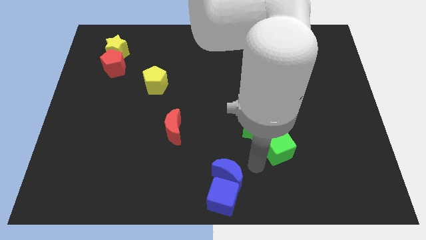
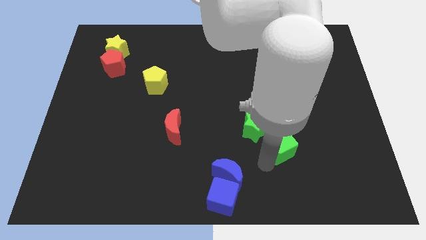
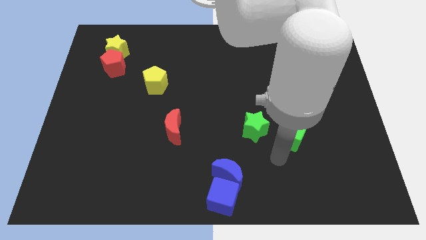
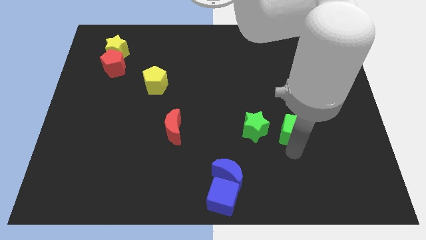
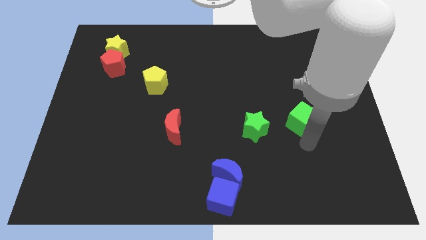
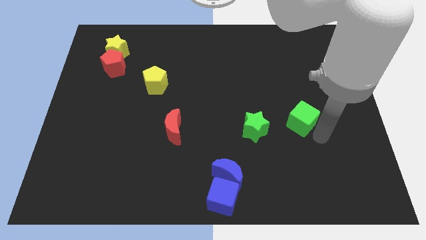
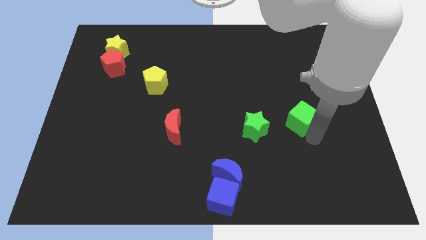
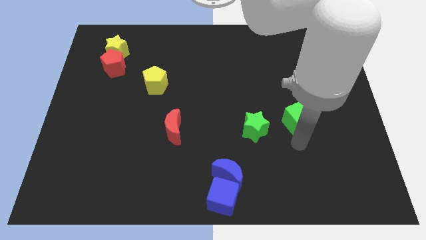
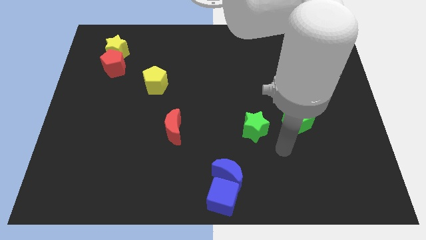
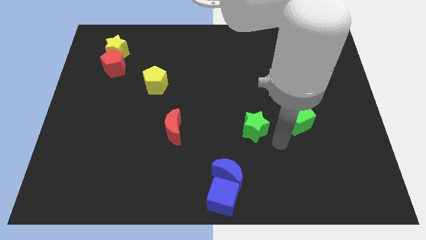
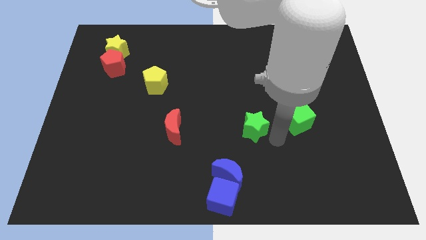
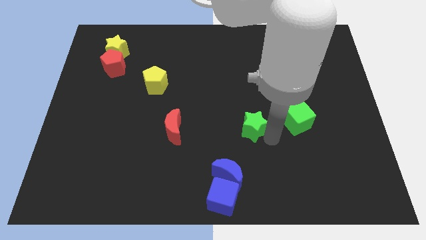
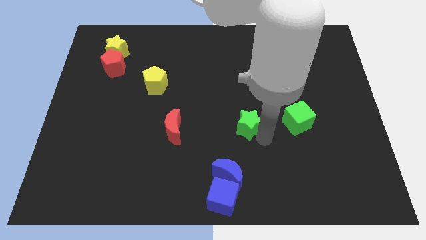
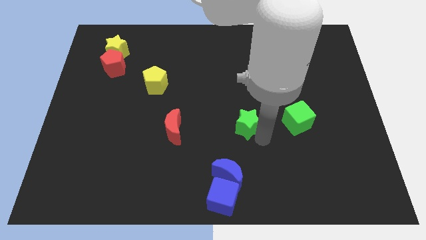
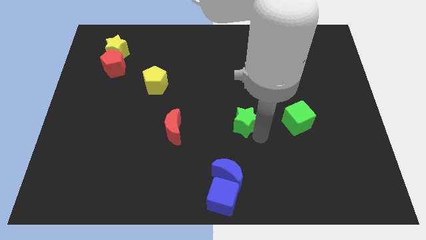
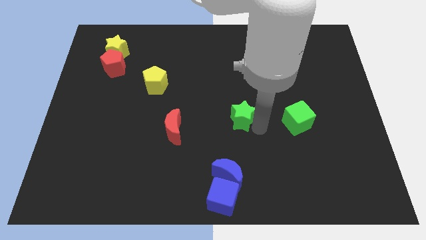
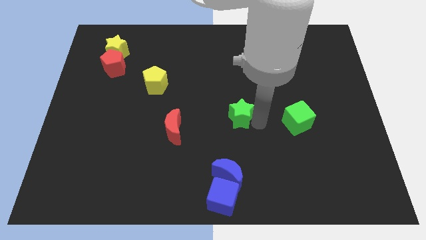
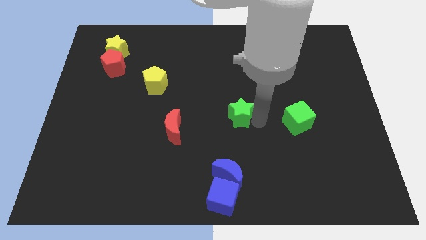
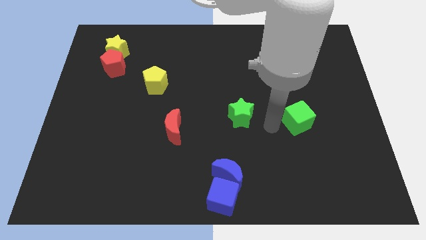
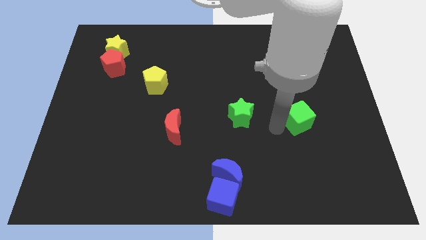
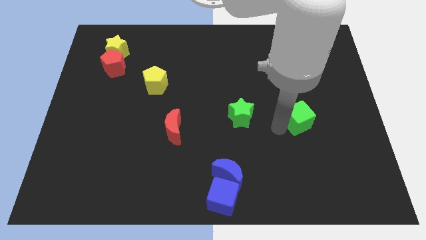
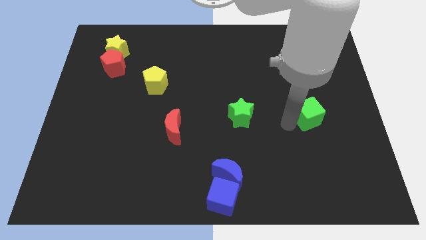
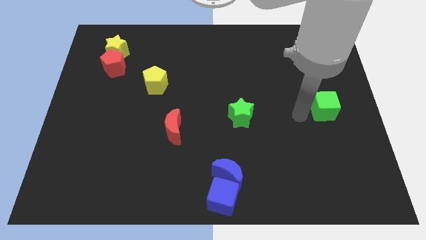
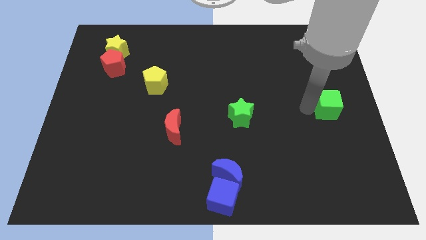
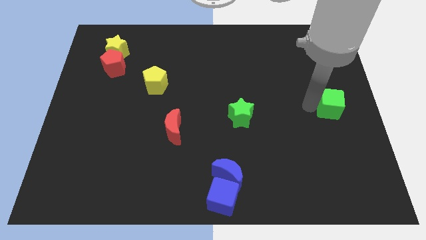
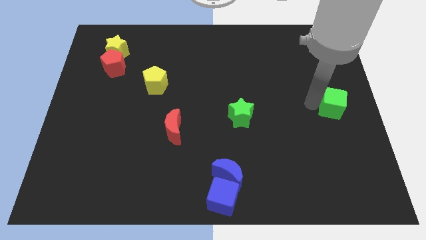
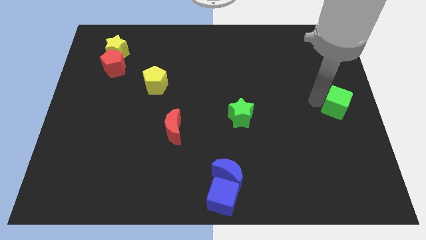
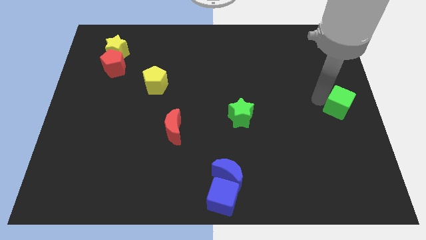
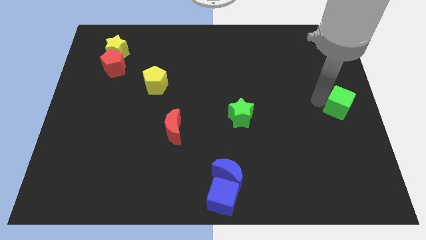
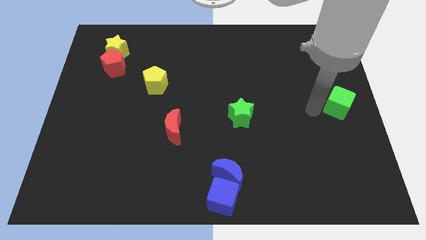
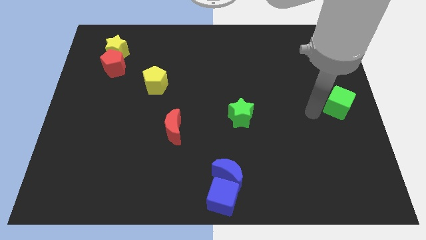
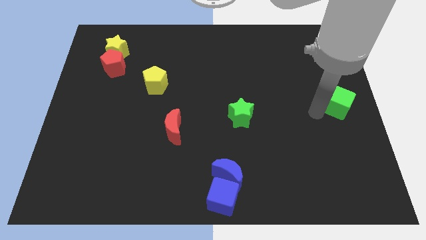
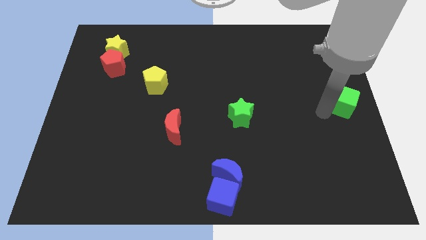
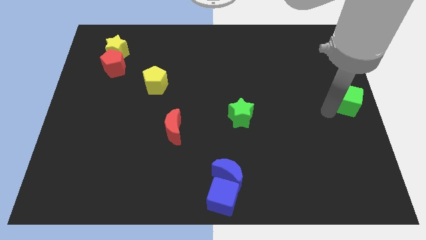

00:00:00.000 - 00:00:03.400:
push the green cube to the right center of the board

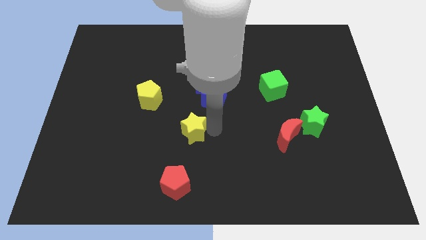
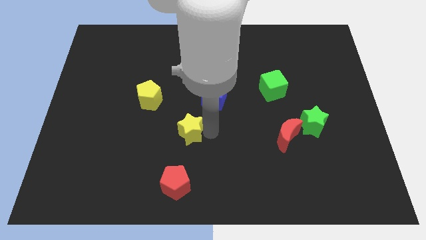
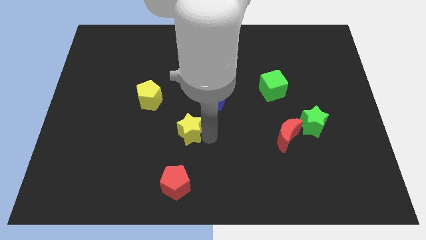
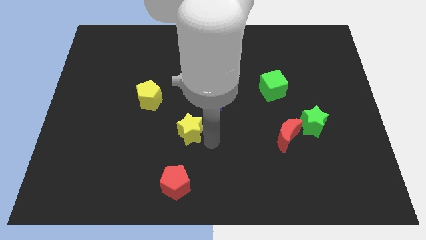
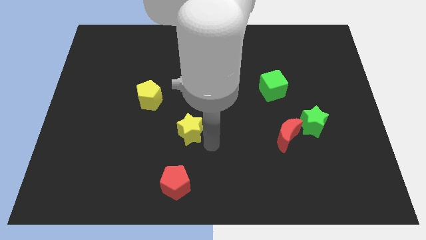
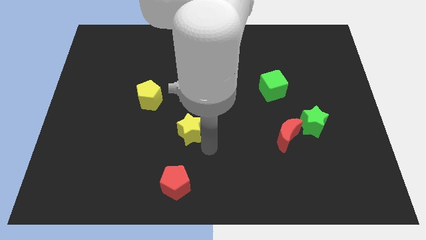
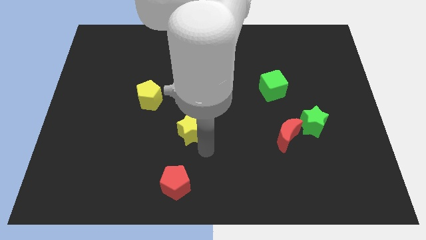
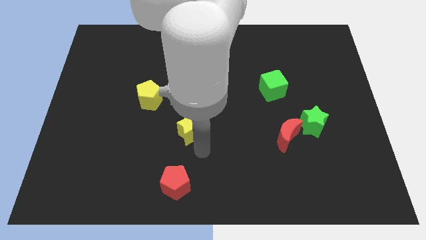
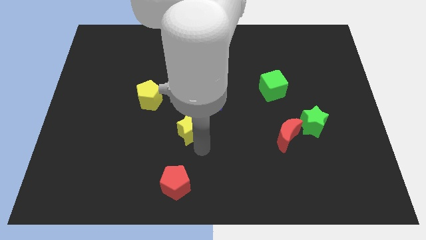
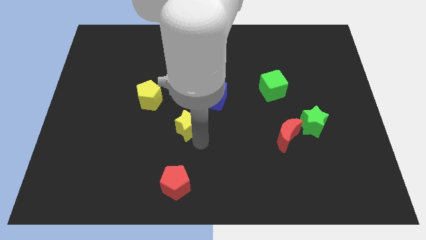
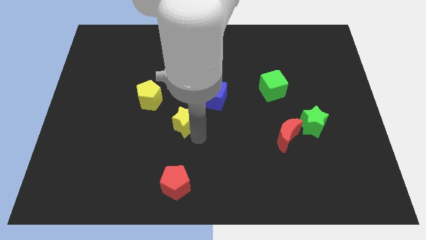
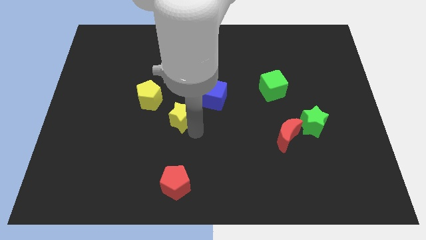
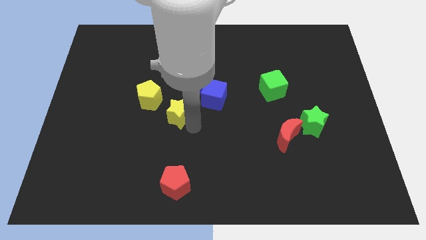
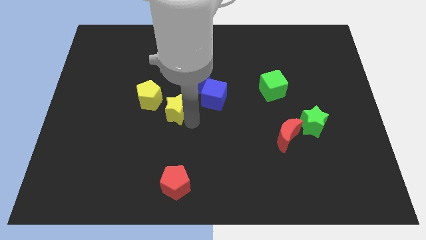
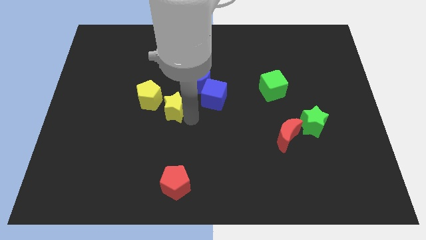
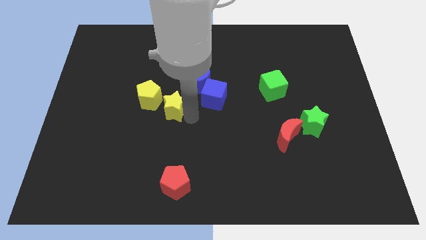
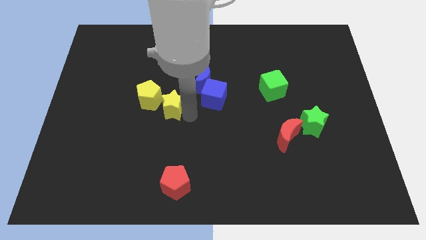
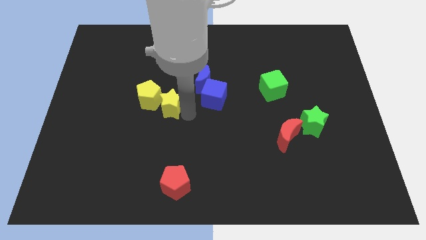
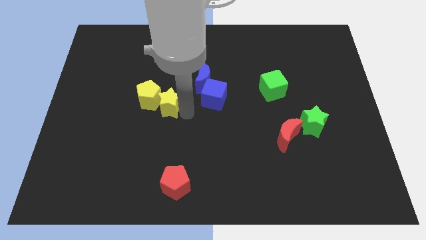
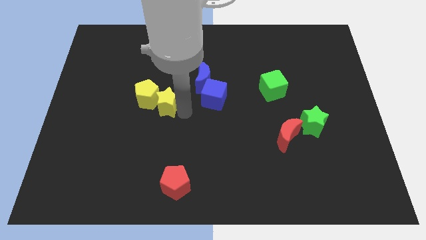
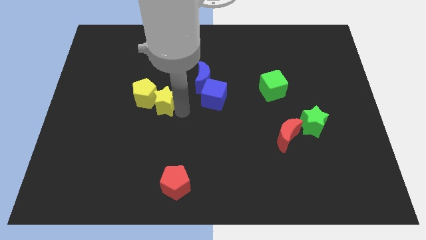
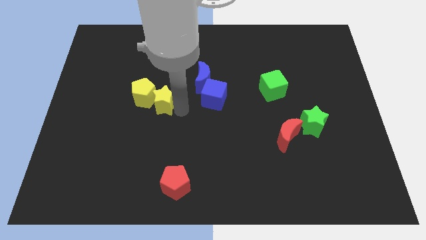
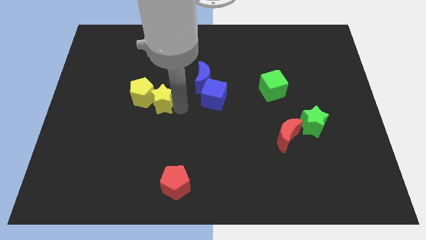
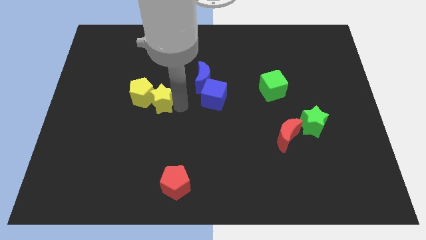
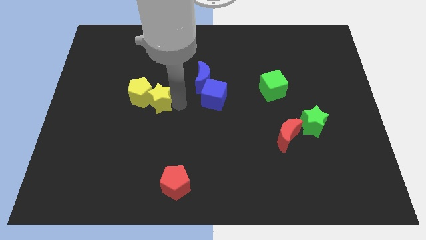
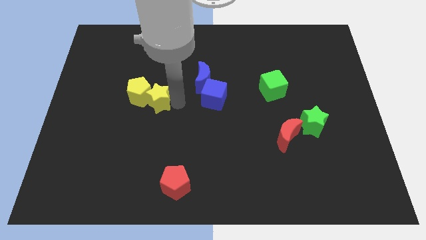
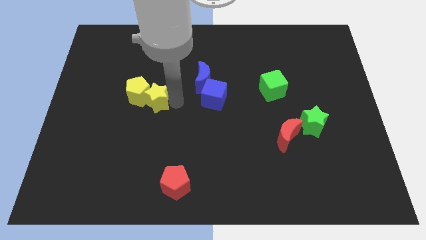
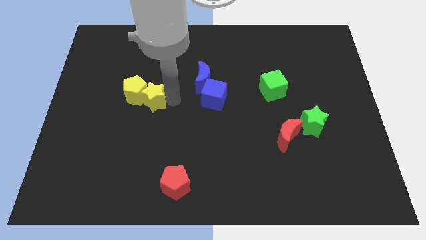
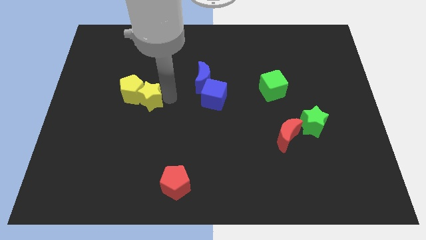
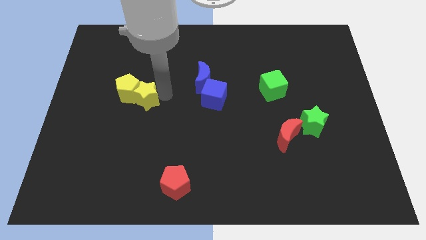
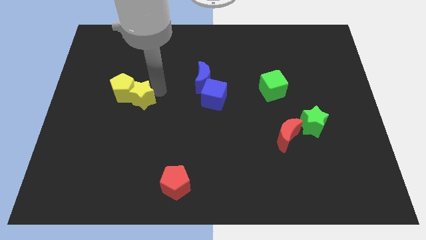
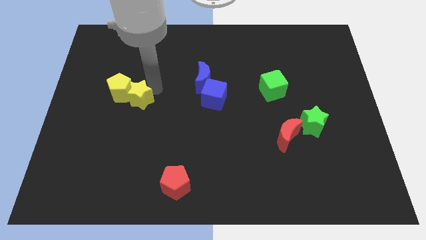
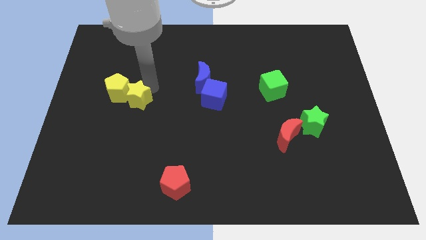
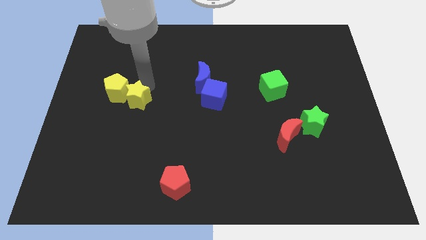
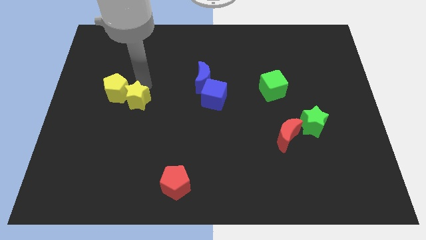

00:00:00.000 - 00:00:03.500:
push the yellow star into the yellow pentagon

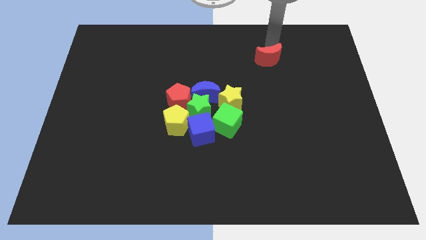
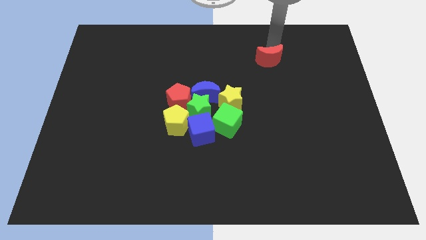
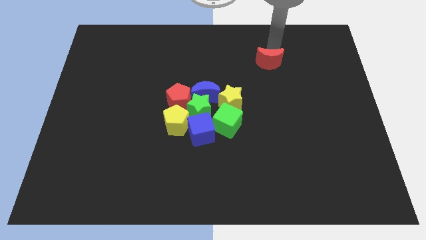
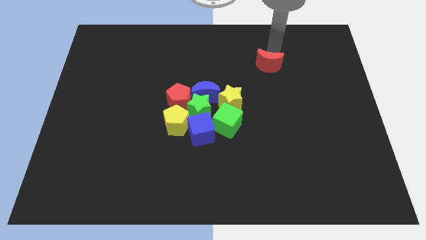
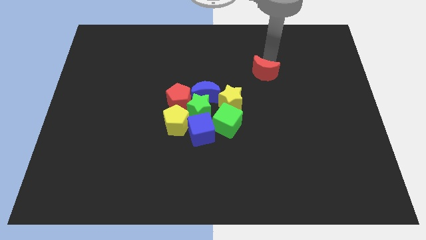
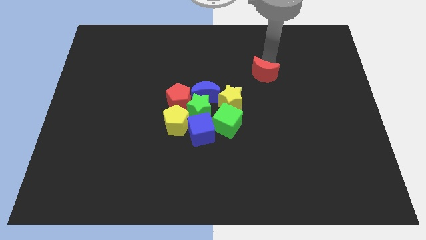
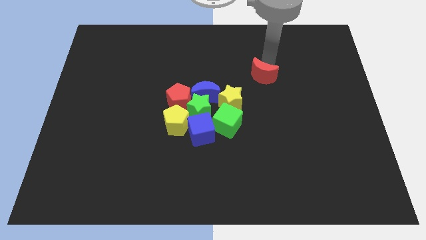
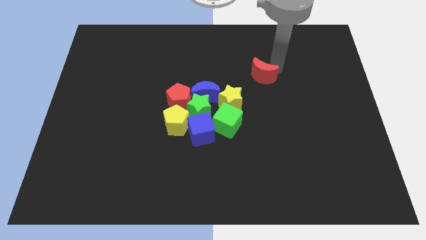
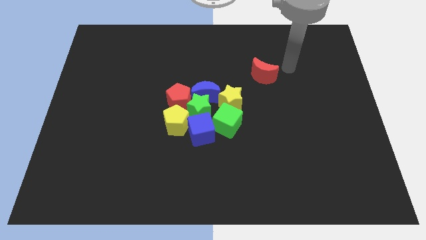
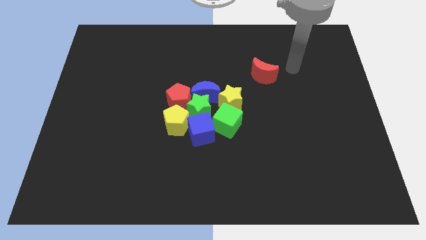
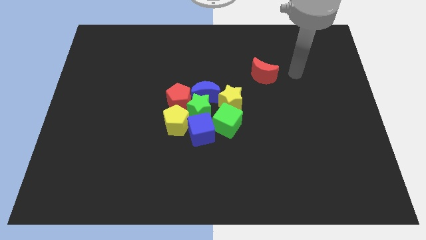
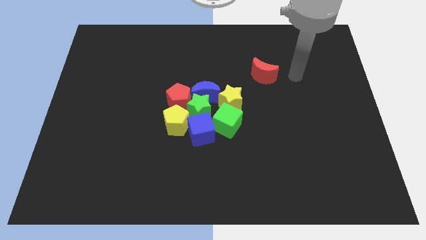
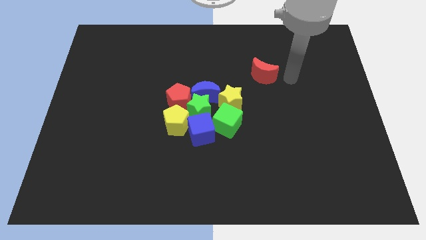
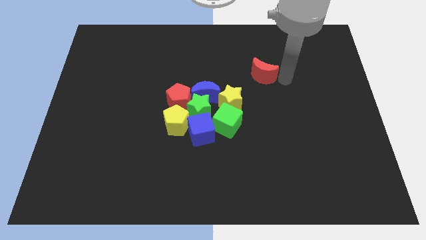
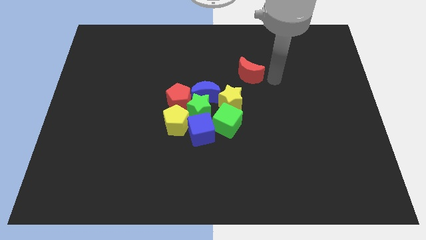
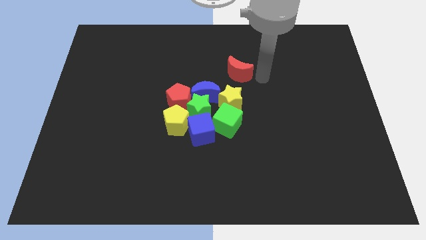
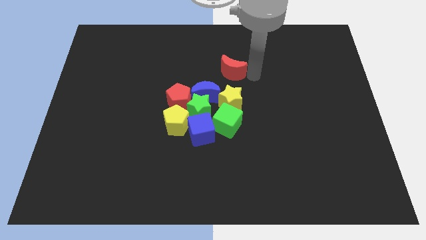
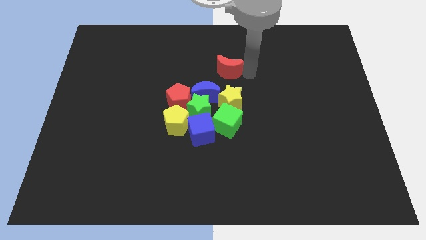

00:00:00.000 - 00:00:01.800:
push the red crescent towards the top of the blue crescent

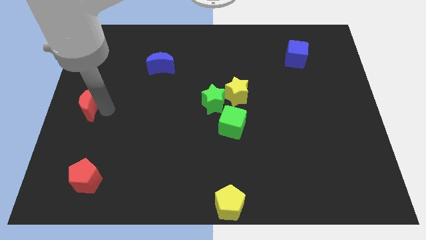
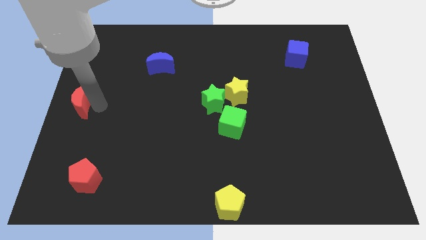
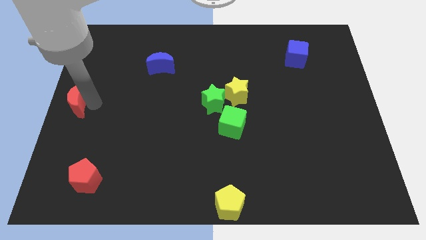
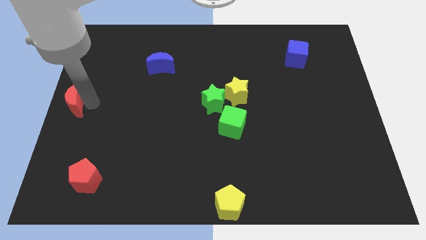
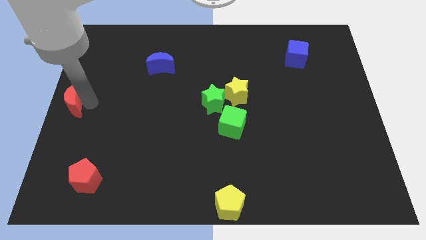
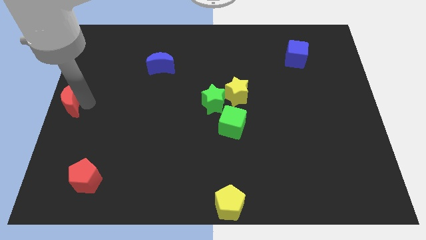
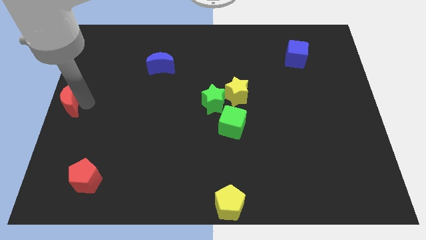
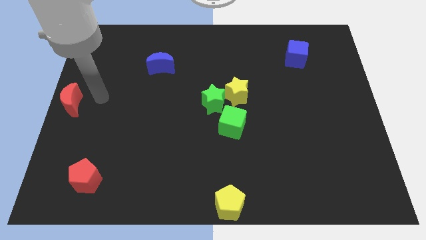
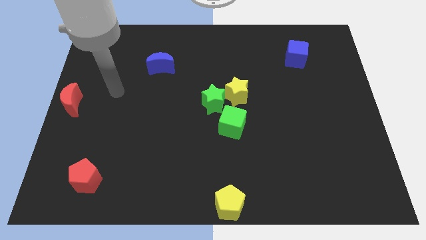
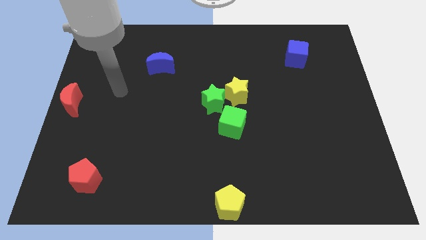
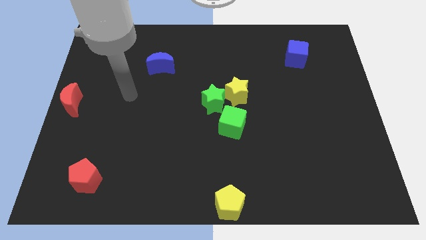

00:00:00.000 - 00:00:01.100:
drag the red moon to the center left
